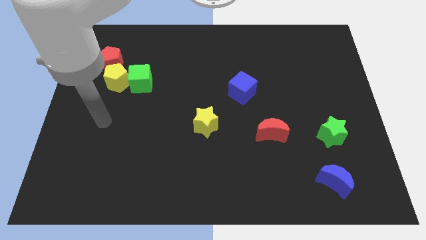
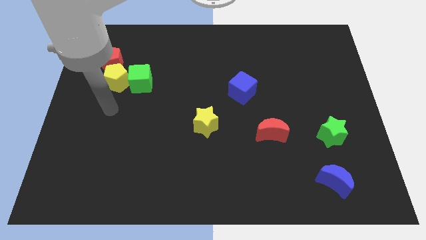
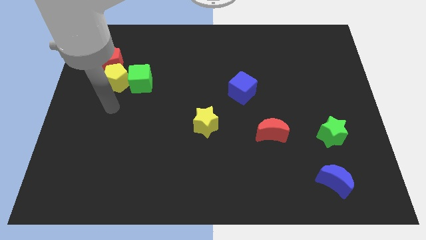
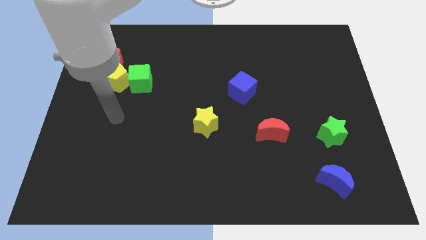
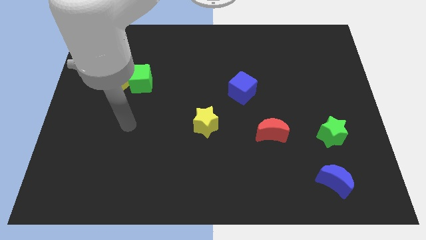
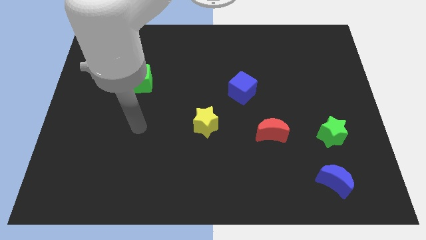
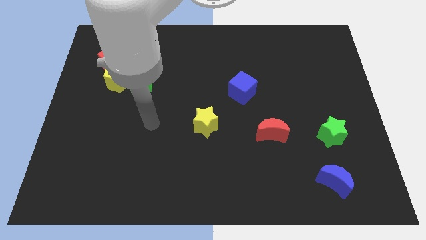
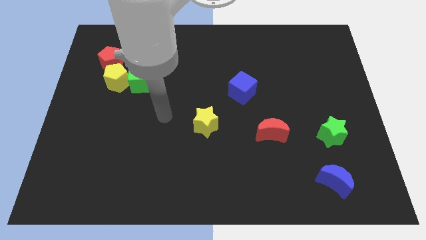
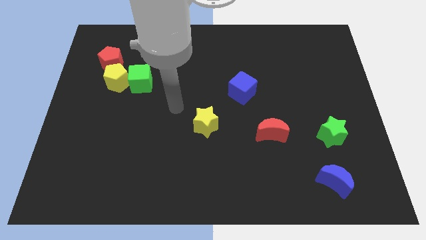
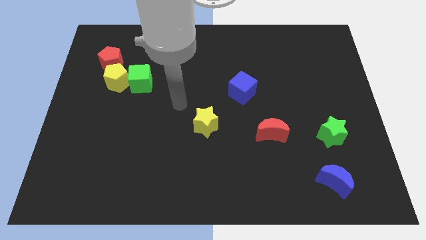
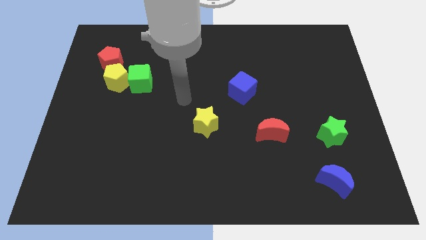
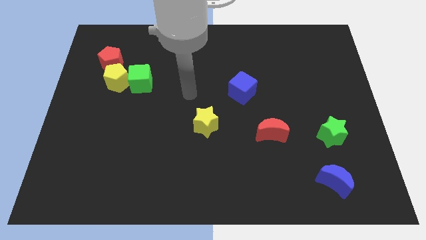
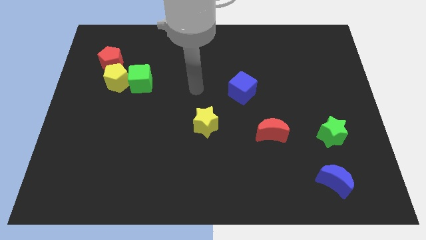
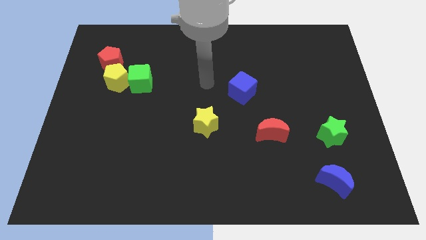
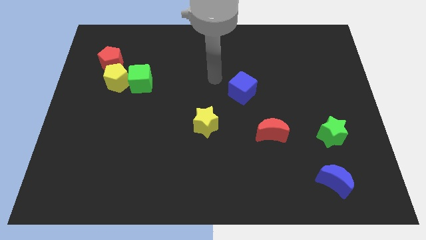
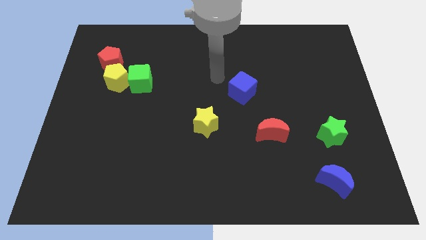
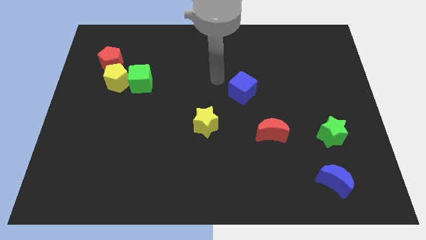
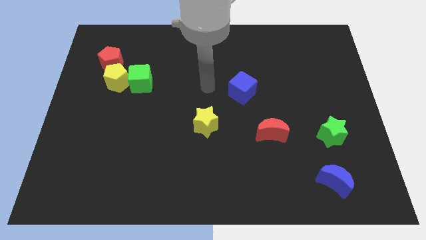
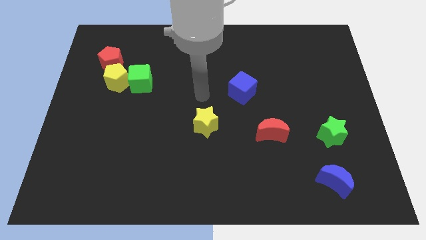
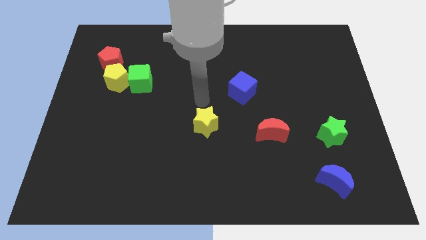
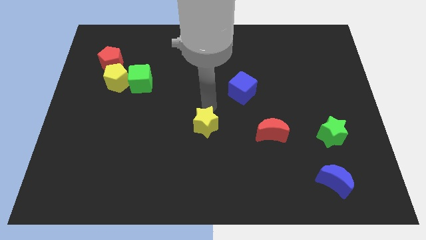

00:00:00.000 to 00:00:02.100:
move your arm to the top of yellow star

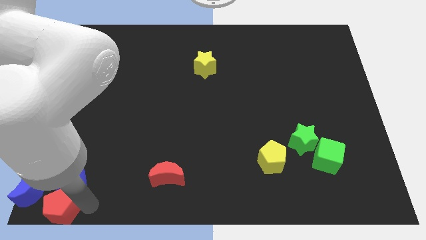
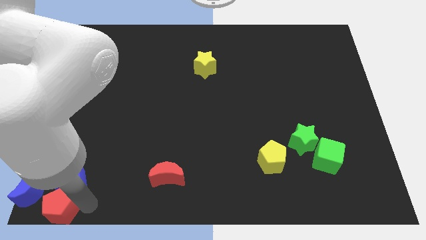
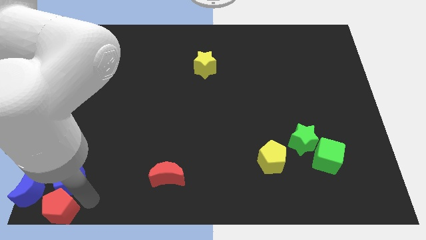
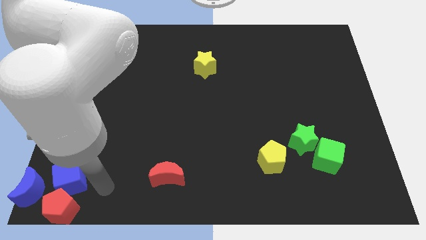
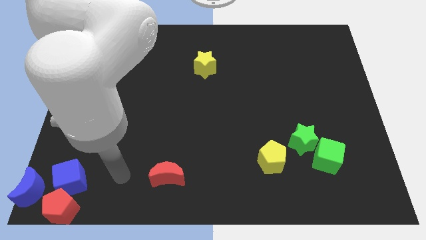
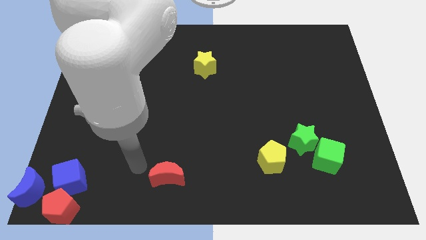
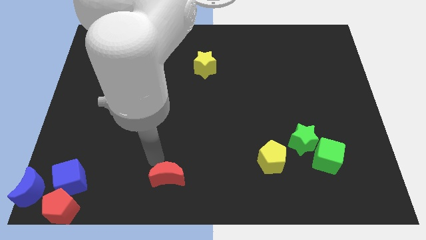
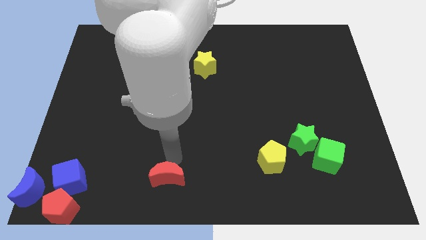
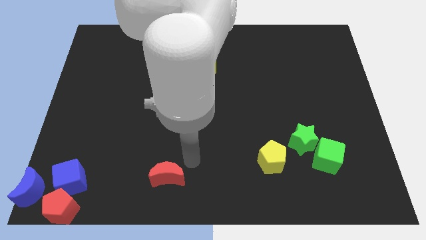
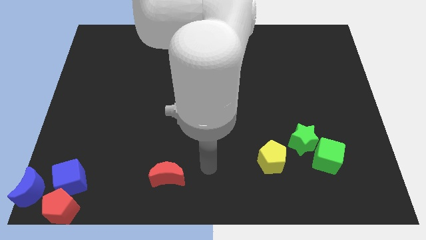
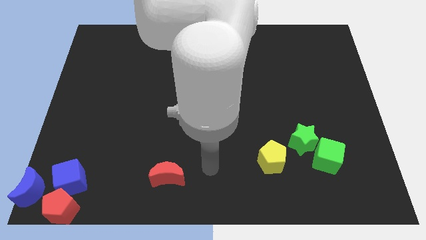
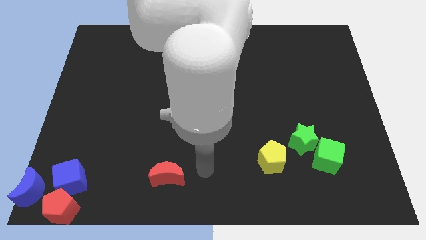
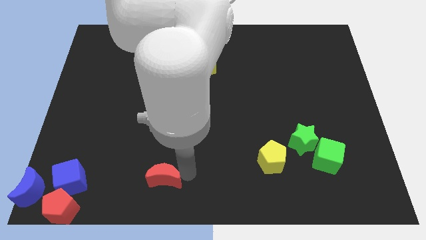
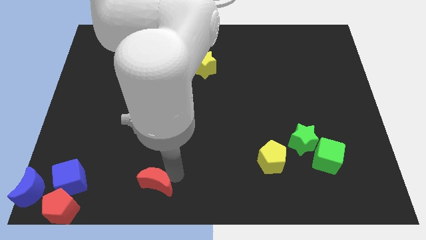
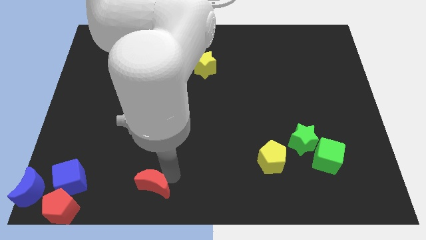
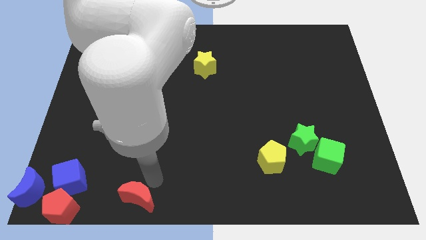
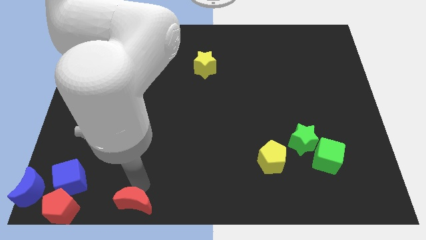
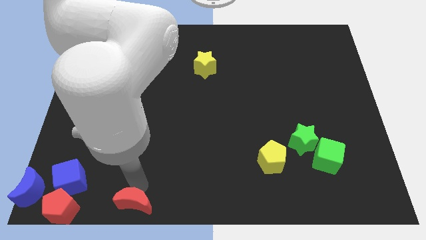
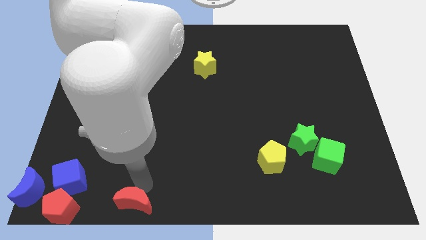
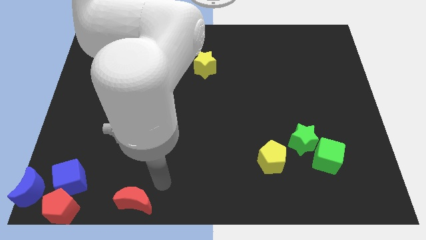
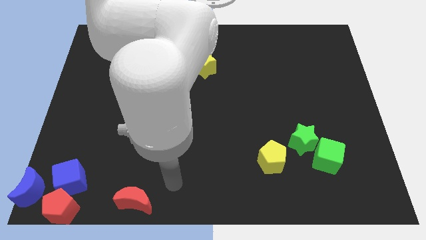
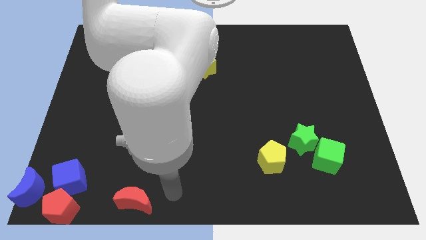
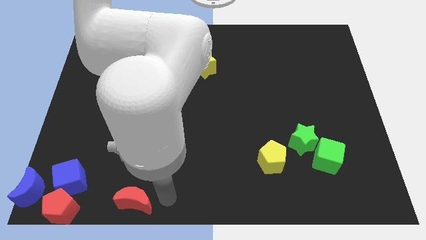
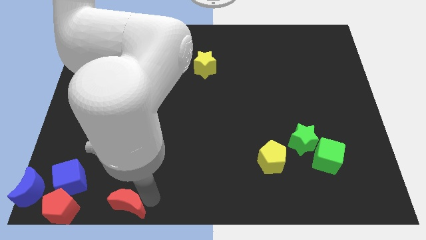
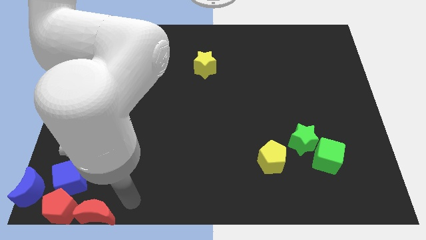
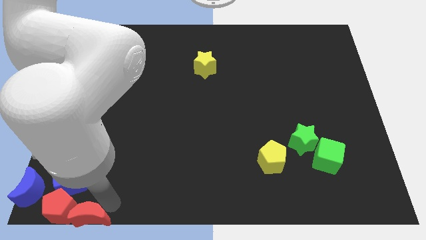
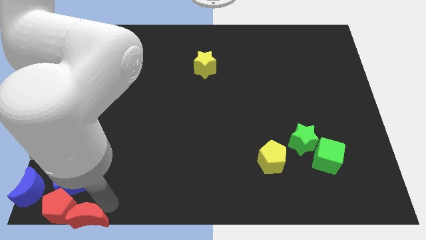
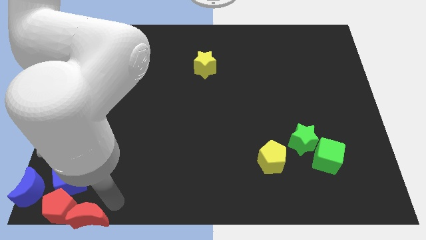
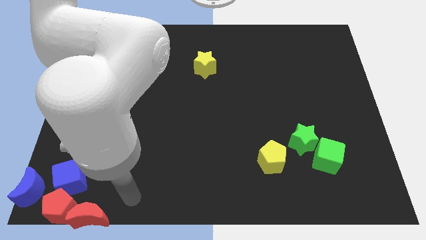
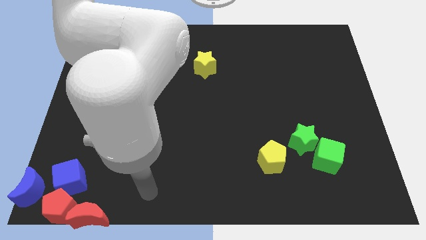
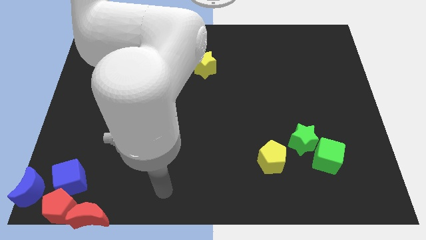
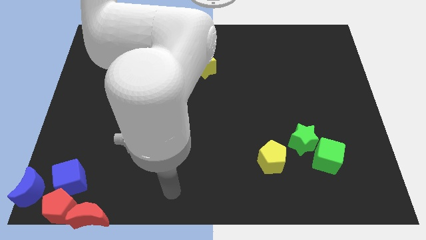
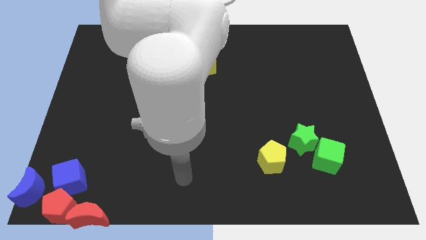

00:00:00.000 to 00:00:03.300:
push the red moon into the right side of the red pentagon

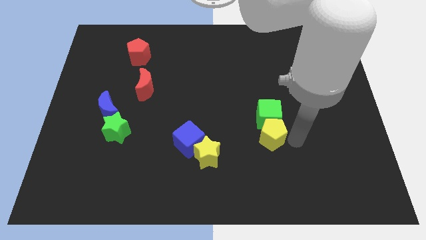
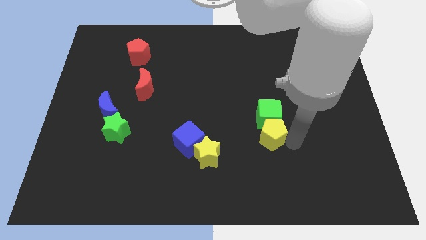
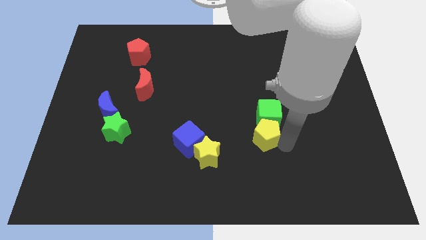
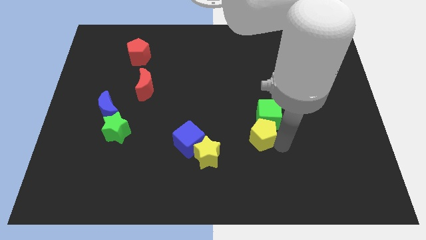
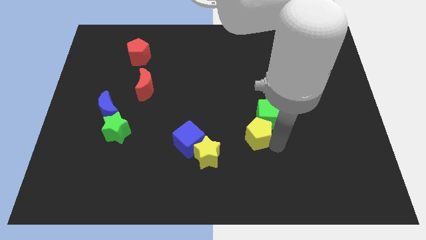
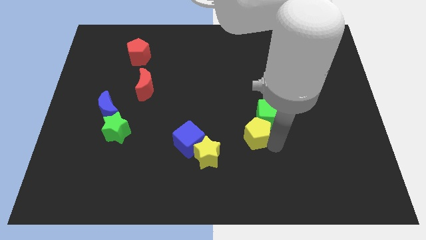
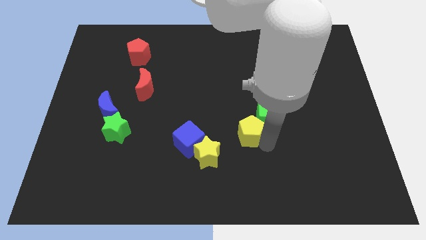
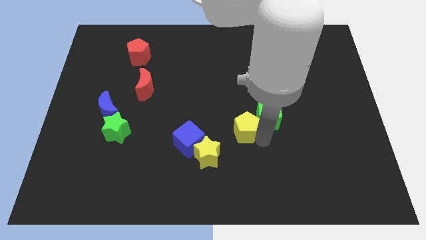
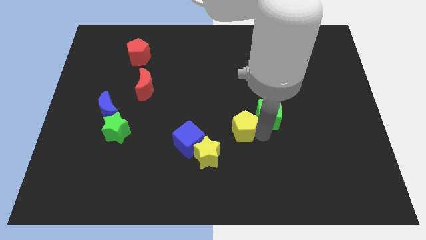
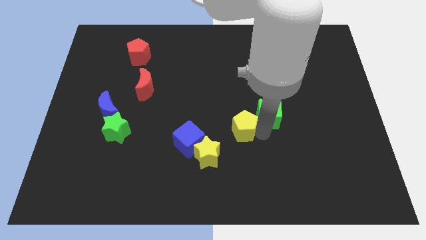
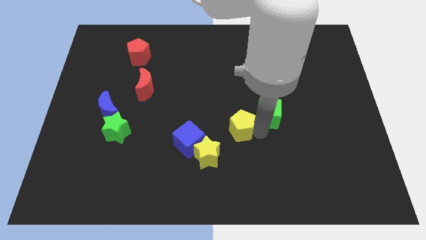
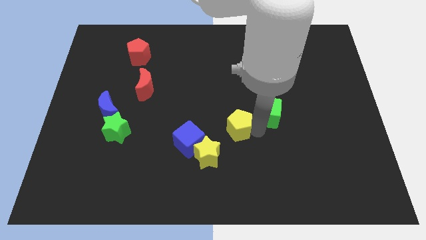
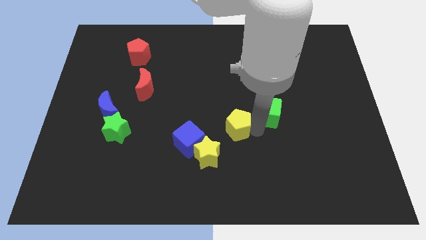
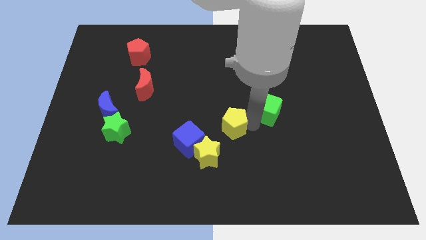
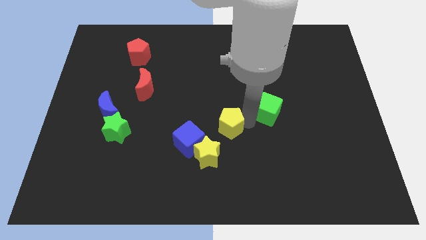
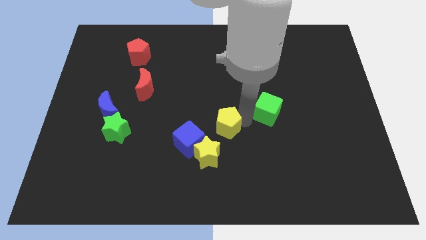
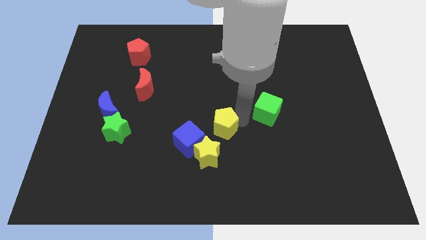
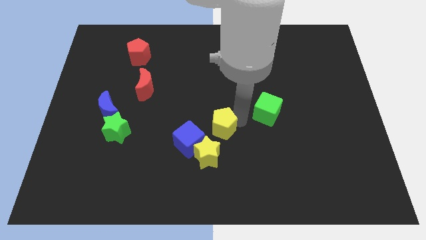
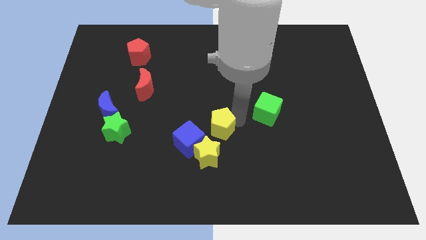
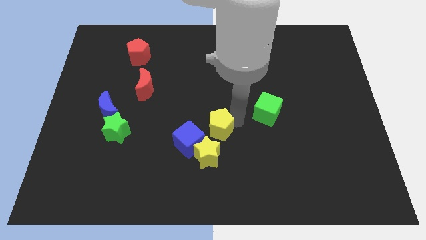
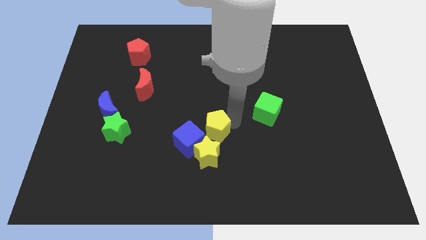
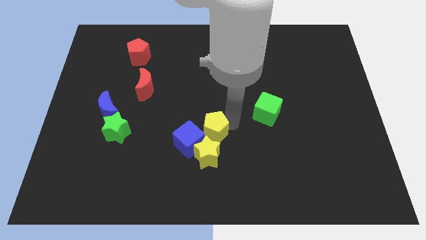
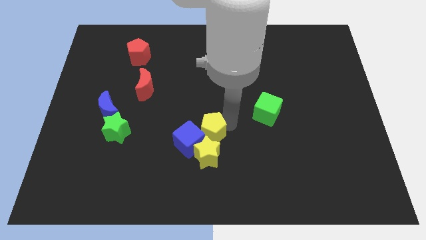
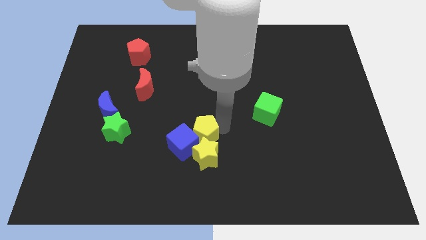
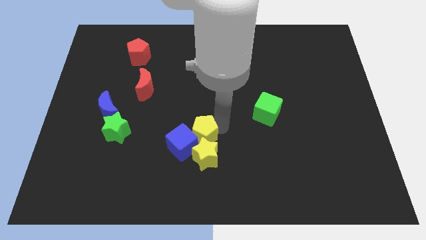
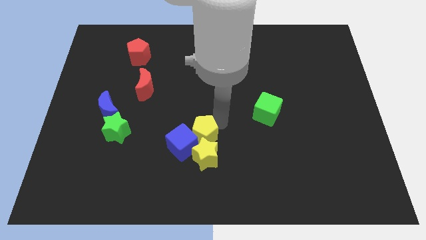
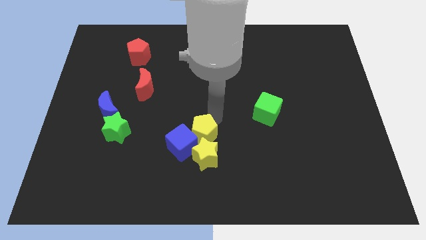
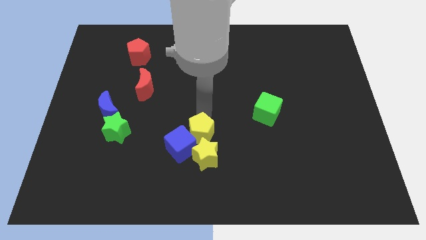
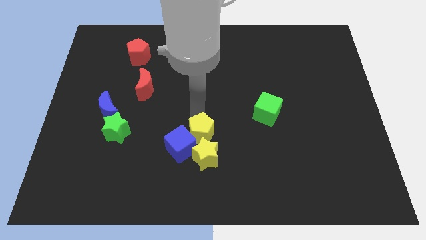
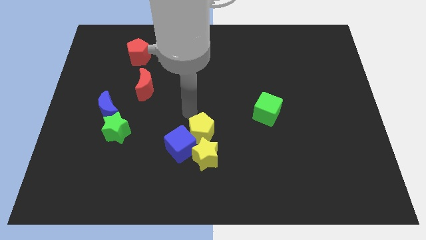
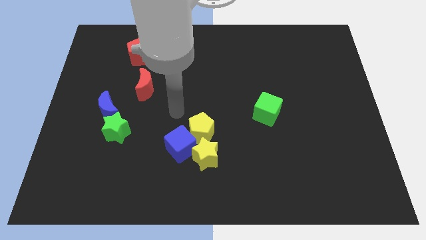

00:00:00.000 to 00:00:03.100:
move the yellow pentagon into the blue cube and the yellow star

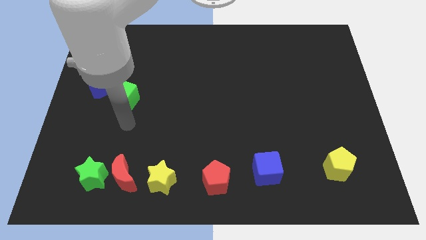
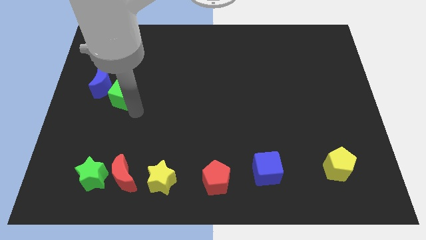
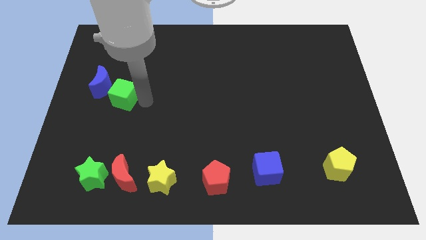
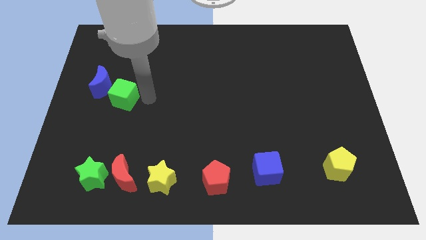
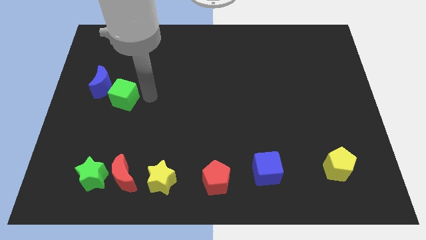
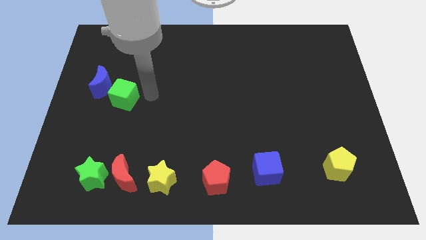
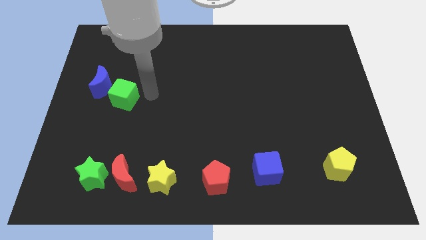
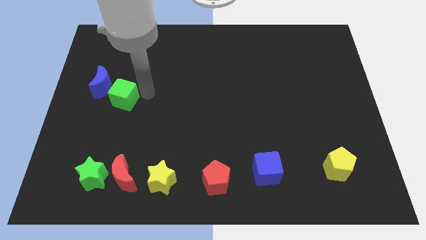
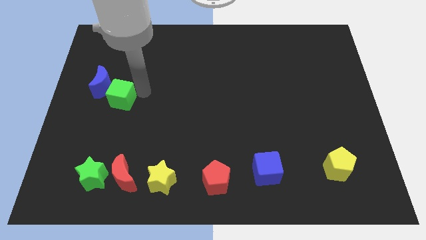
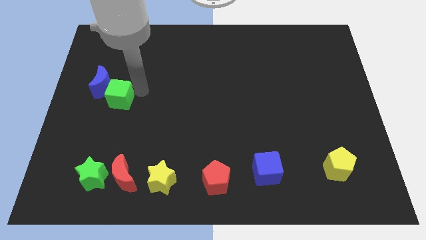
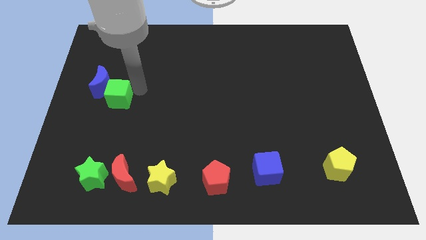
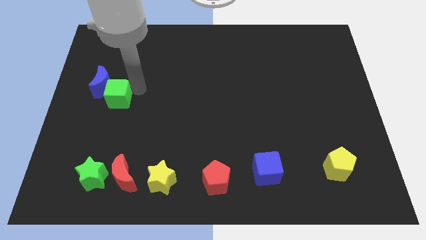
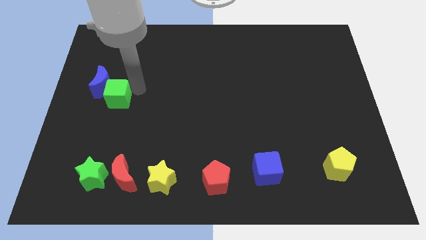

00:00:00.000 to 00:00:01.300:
slightly push the green cube into the blue moon
